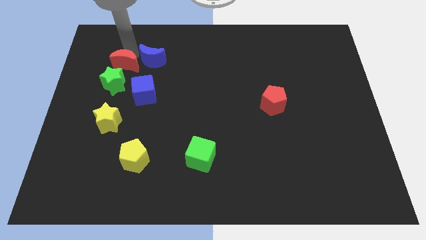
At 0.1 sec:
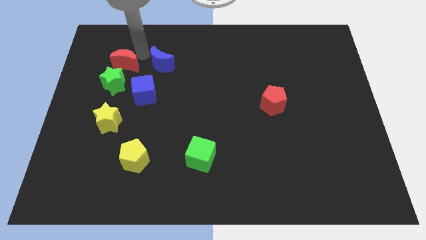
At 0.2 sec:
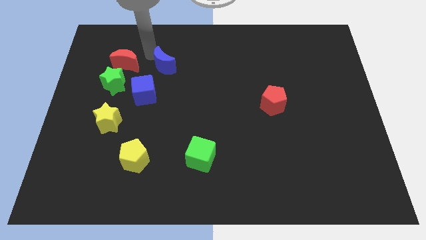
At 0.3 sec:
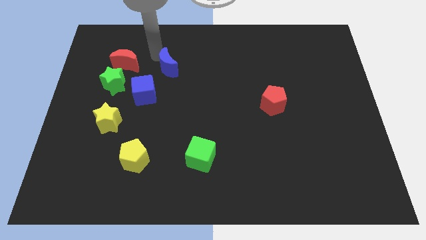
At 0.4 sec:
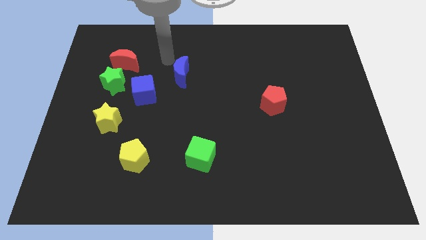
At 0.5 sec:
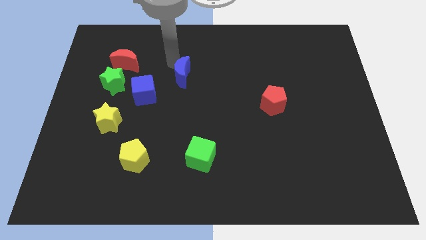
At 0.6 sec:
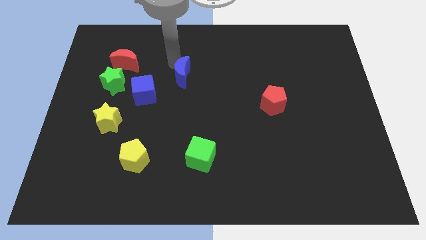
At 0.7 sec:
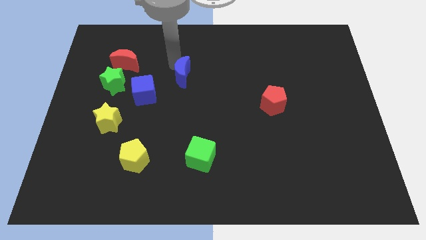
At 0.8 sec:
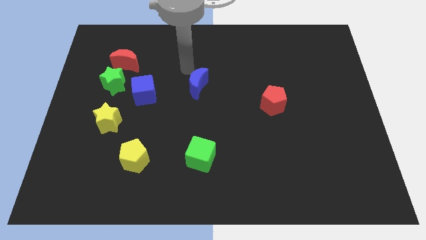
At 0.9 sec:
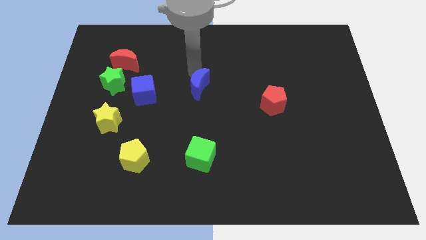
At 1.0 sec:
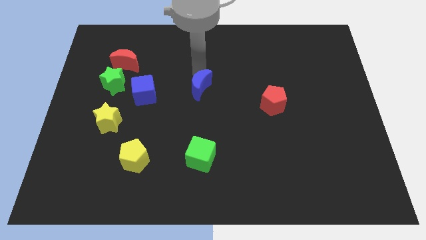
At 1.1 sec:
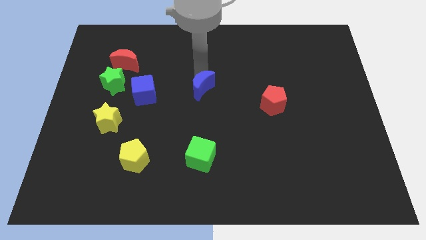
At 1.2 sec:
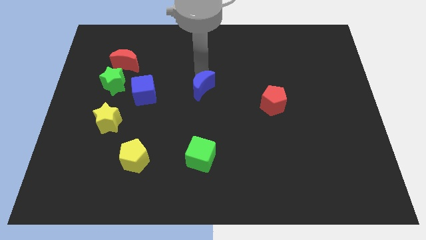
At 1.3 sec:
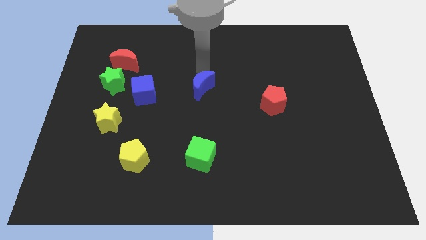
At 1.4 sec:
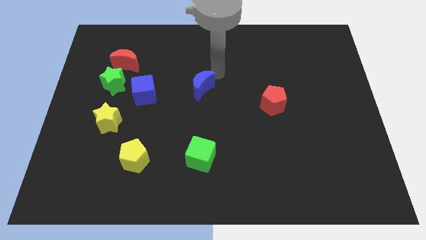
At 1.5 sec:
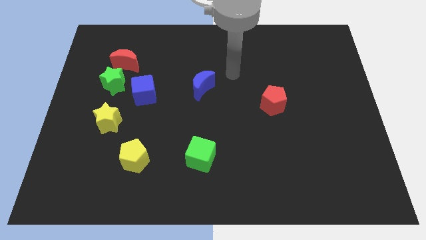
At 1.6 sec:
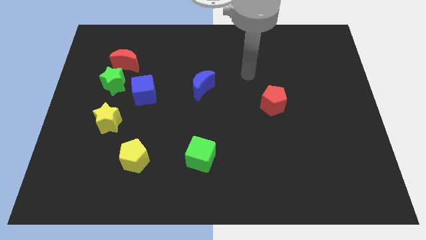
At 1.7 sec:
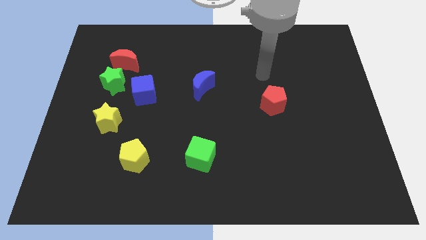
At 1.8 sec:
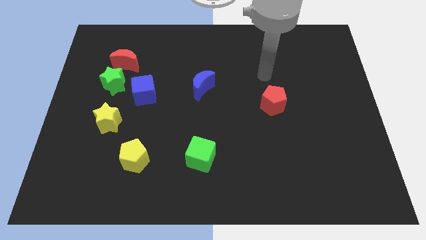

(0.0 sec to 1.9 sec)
place the blue moon to the right of the blue cube

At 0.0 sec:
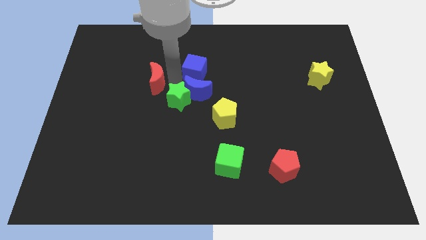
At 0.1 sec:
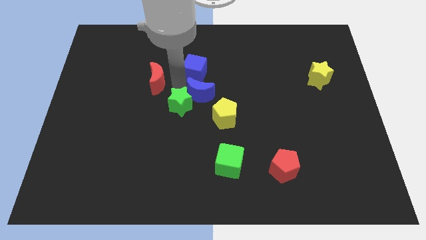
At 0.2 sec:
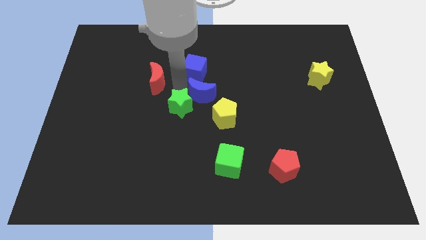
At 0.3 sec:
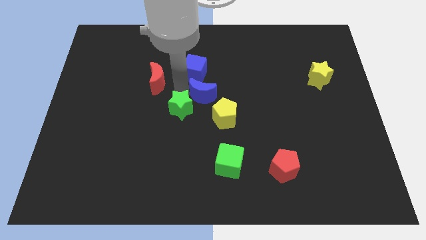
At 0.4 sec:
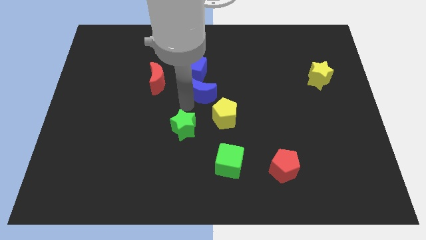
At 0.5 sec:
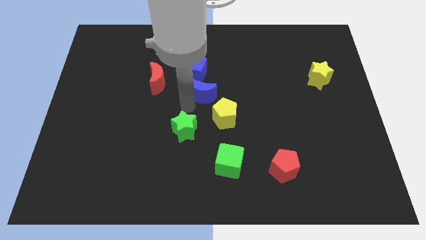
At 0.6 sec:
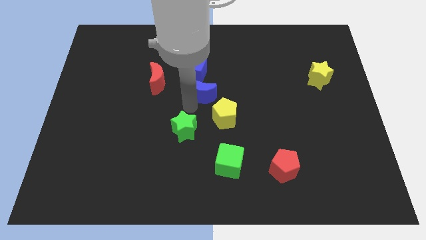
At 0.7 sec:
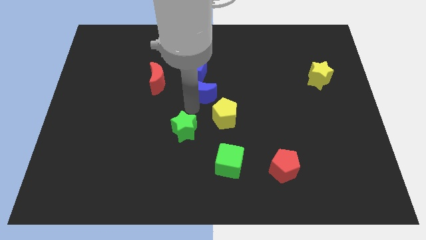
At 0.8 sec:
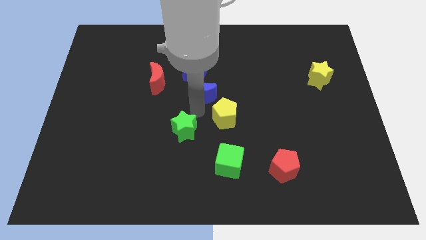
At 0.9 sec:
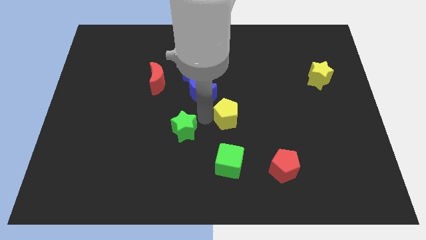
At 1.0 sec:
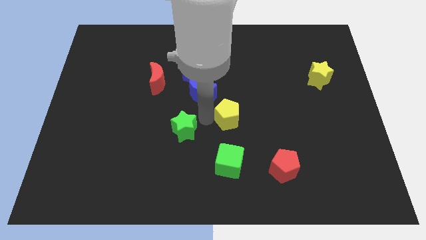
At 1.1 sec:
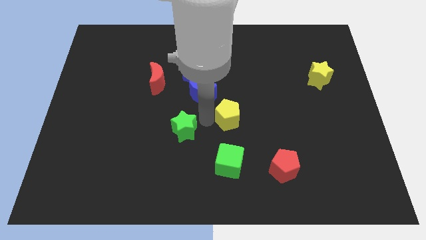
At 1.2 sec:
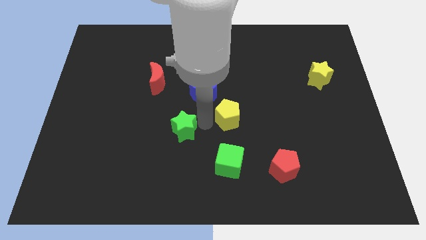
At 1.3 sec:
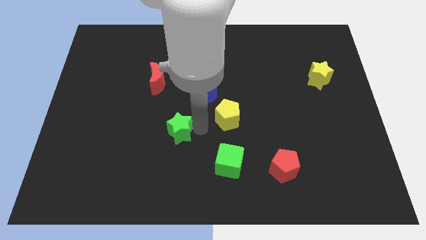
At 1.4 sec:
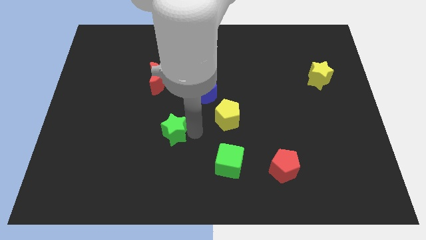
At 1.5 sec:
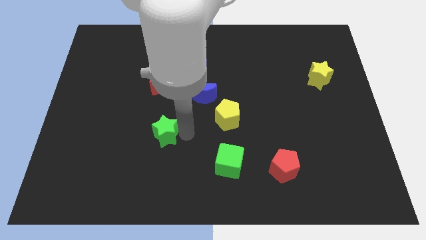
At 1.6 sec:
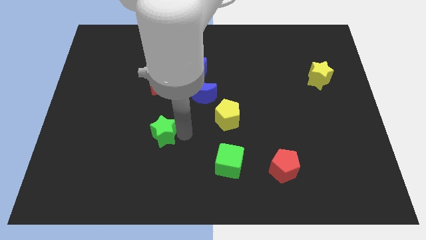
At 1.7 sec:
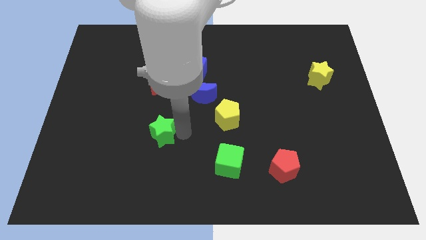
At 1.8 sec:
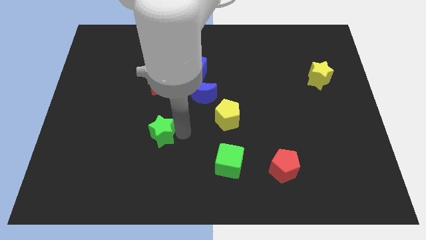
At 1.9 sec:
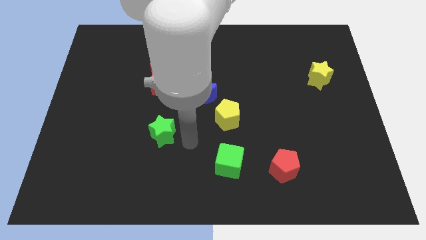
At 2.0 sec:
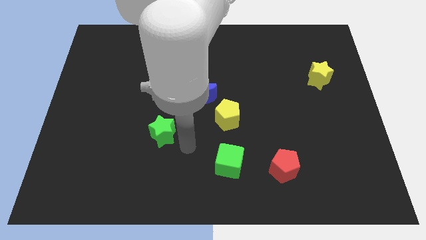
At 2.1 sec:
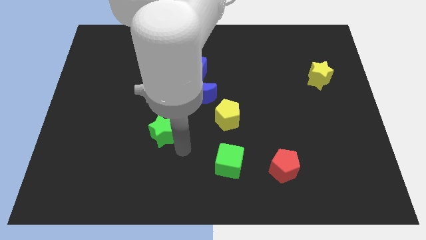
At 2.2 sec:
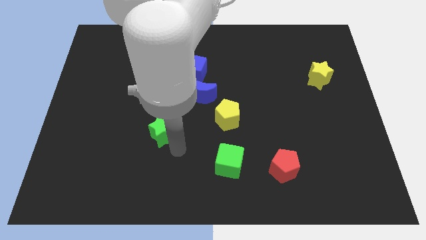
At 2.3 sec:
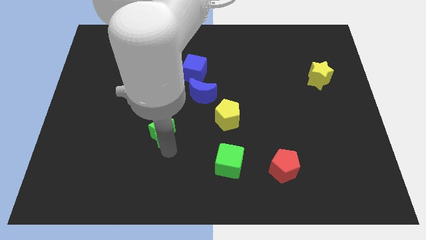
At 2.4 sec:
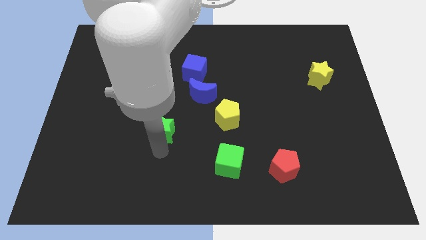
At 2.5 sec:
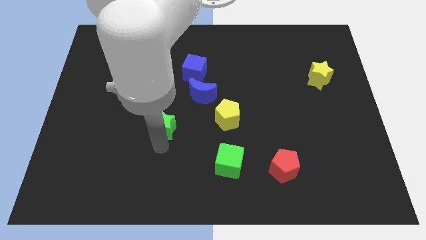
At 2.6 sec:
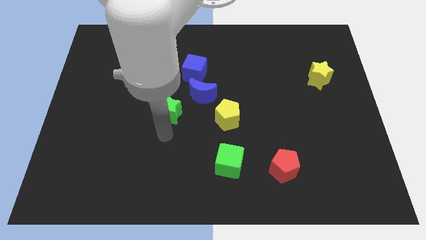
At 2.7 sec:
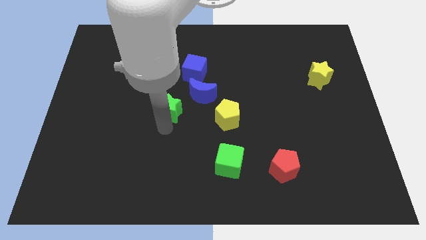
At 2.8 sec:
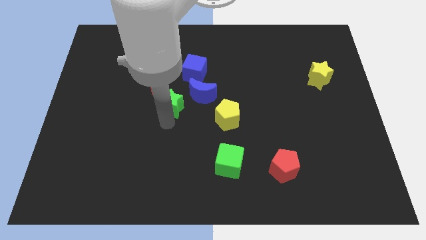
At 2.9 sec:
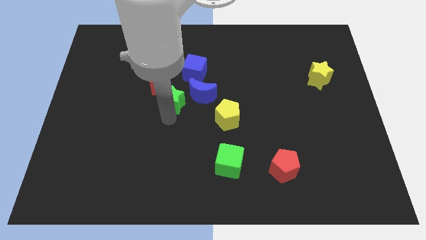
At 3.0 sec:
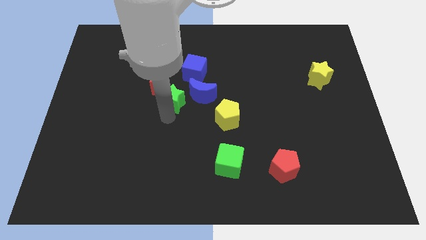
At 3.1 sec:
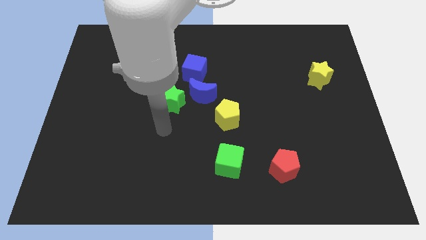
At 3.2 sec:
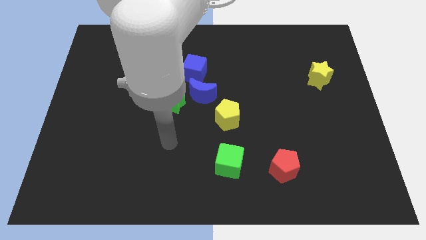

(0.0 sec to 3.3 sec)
push the green star diagonal below the blue blocks

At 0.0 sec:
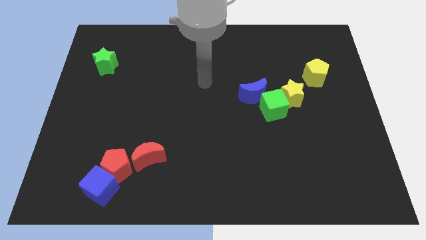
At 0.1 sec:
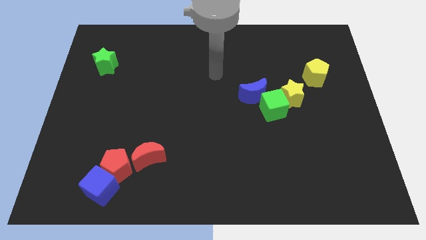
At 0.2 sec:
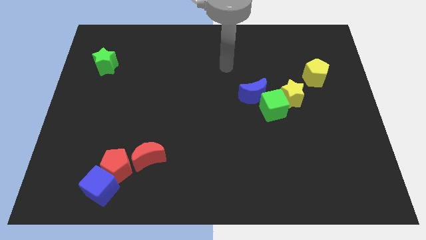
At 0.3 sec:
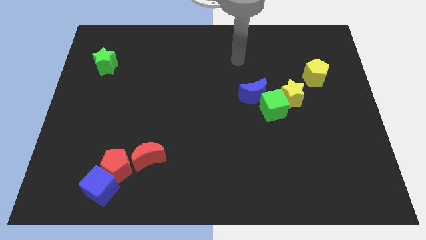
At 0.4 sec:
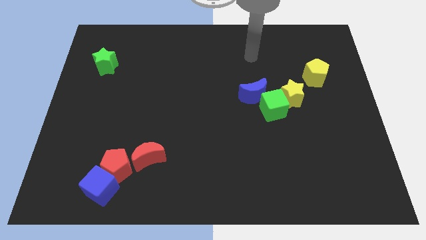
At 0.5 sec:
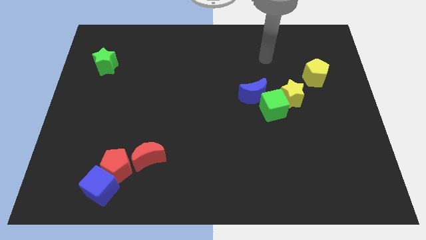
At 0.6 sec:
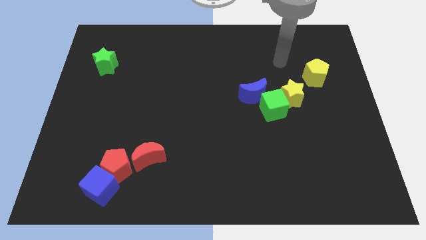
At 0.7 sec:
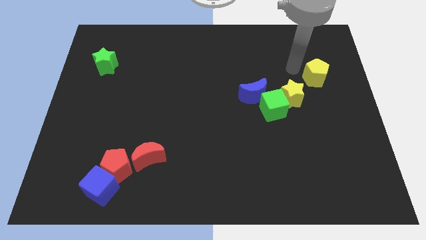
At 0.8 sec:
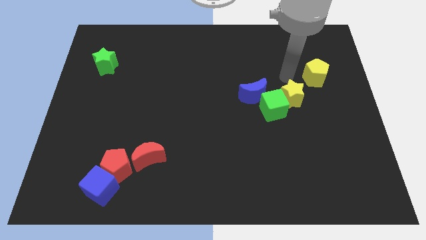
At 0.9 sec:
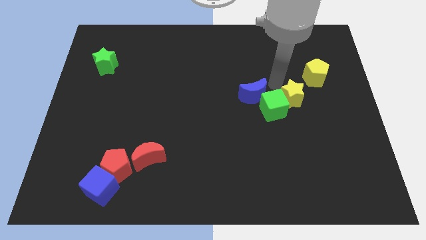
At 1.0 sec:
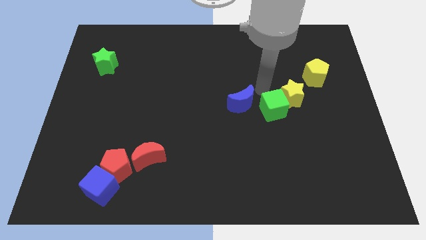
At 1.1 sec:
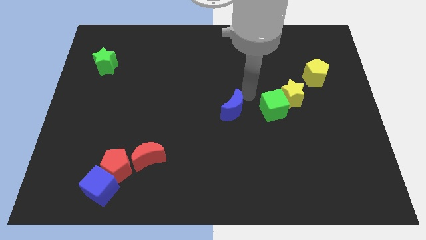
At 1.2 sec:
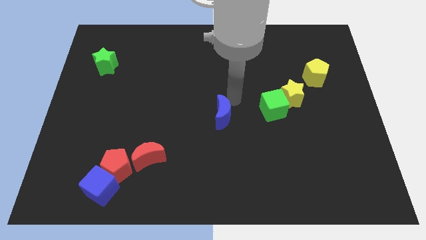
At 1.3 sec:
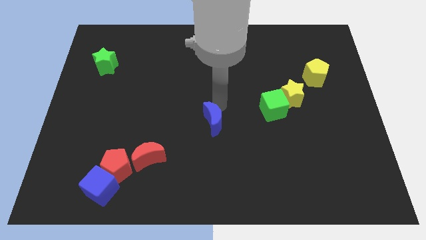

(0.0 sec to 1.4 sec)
move blue moon to the center

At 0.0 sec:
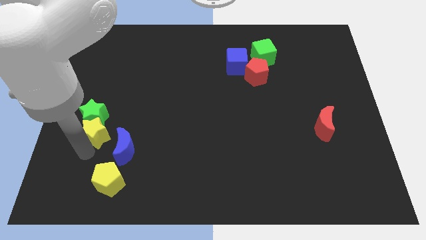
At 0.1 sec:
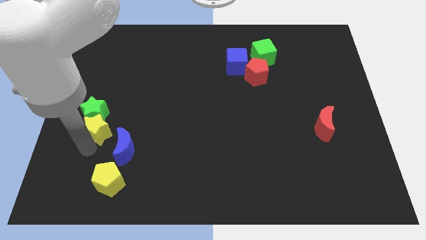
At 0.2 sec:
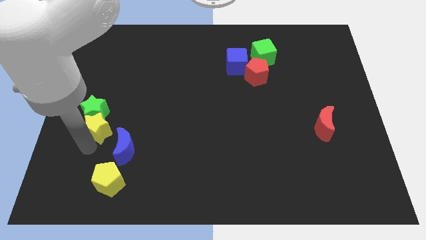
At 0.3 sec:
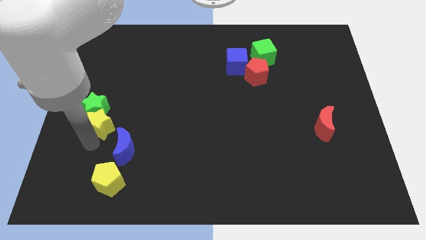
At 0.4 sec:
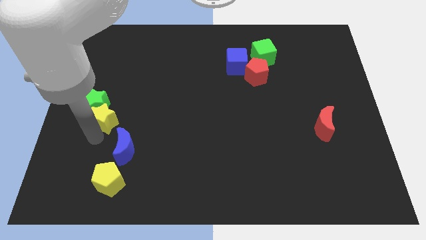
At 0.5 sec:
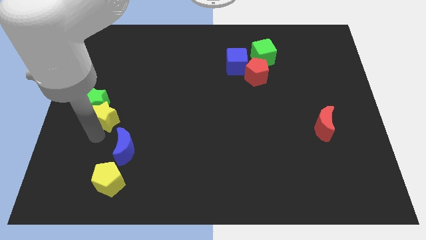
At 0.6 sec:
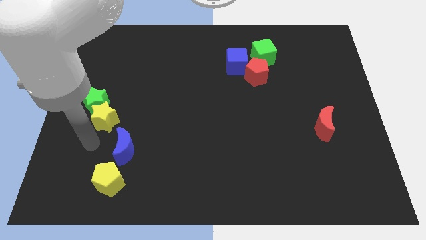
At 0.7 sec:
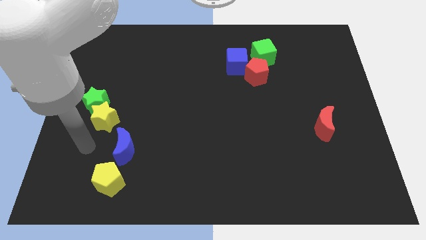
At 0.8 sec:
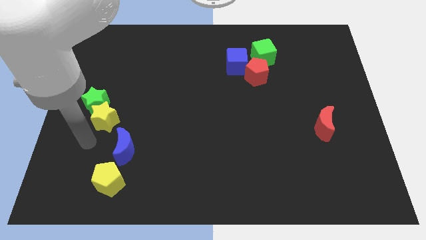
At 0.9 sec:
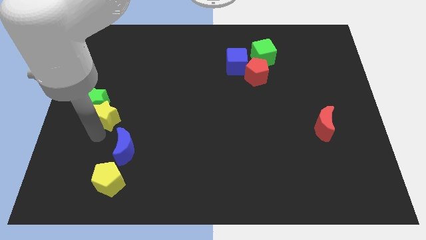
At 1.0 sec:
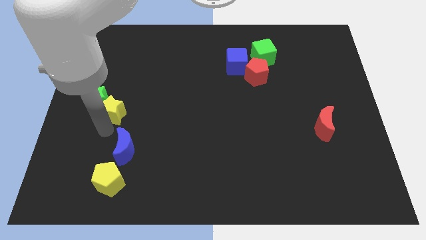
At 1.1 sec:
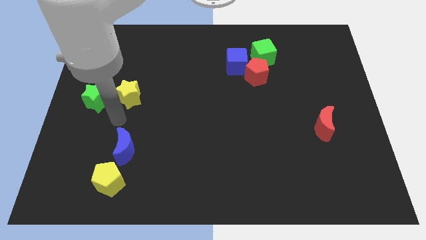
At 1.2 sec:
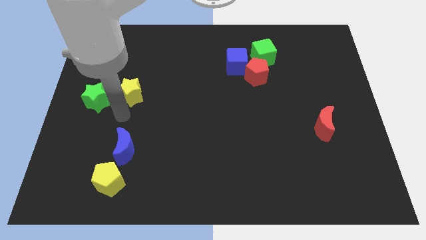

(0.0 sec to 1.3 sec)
place the yellow star right side to the green star

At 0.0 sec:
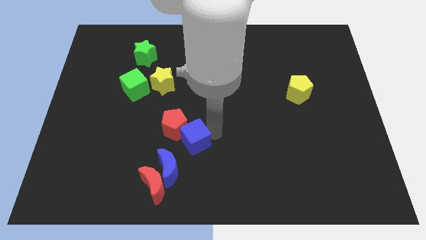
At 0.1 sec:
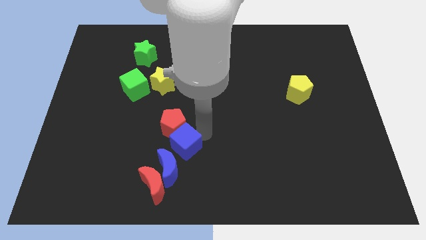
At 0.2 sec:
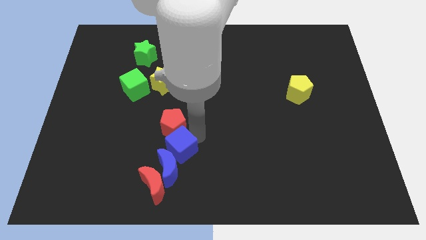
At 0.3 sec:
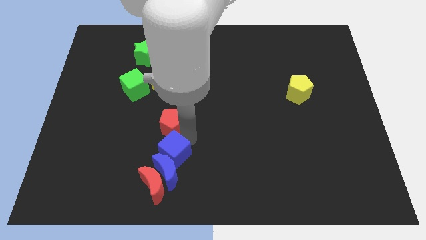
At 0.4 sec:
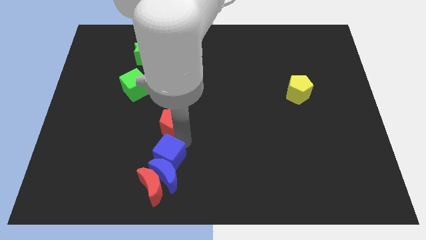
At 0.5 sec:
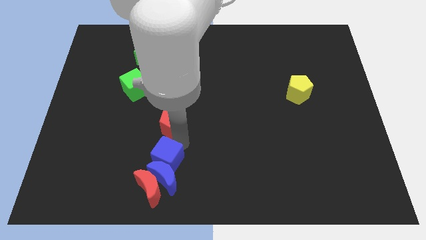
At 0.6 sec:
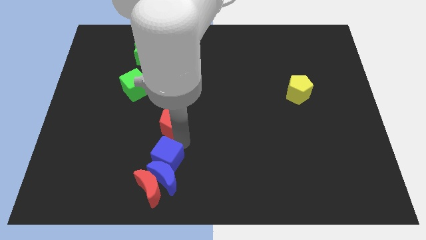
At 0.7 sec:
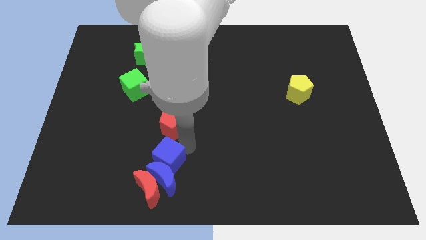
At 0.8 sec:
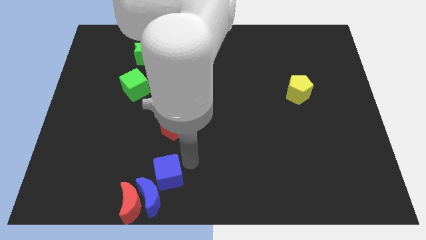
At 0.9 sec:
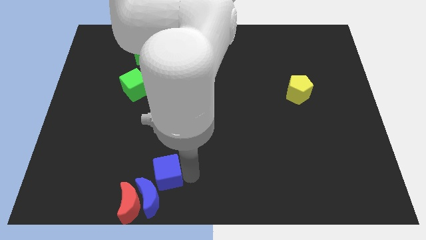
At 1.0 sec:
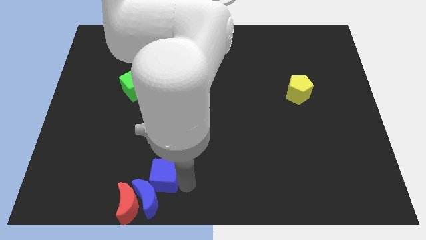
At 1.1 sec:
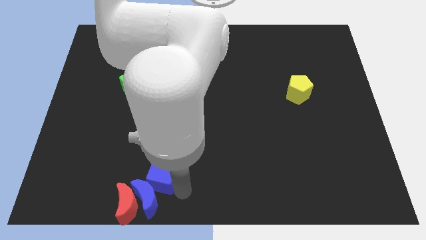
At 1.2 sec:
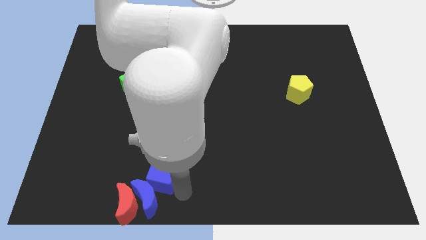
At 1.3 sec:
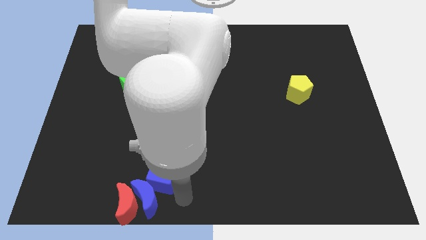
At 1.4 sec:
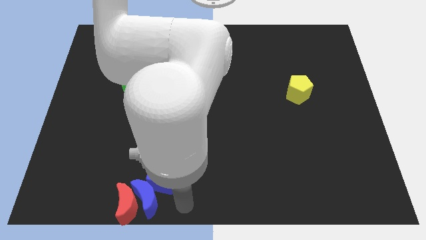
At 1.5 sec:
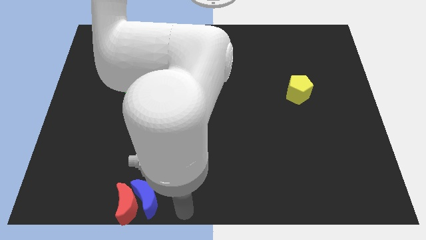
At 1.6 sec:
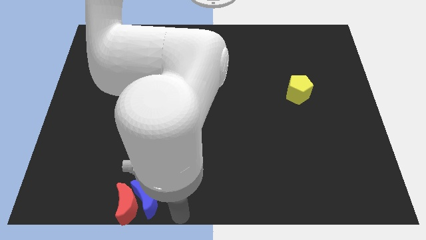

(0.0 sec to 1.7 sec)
move the blue cube into the blue crescent
